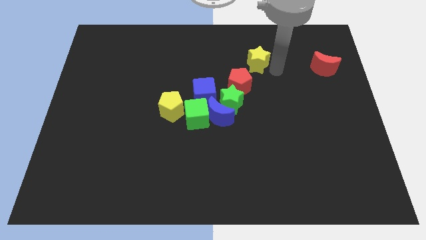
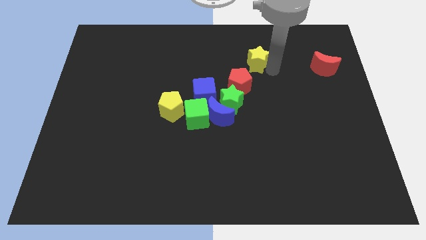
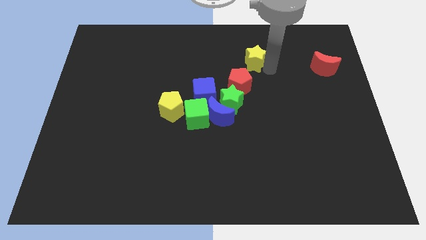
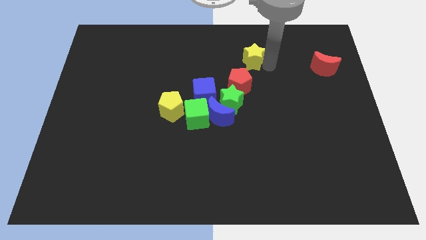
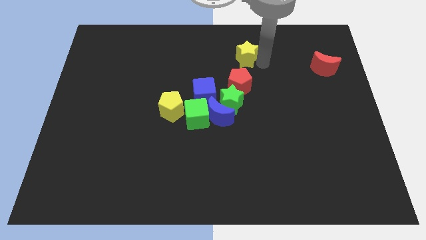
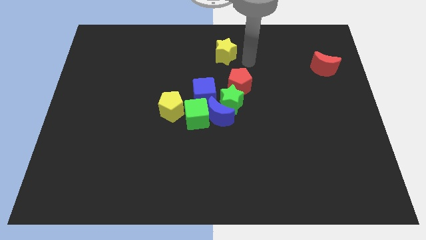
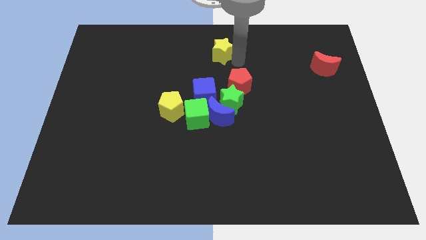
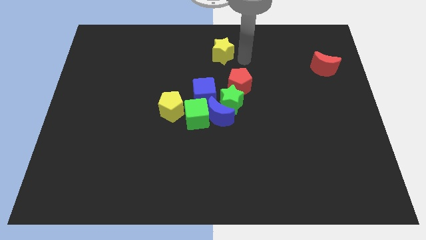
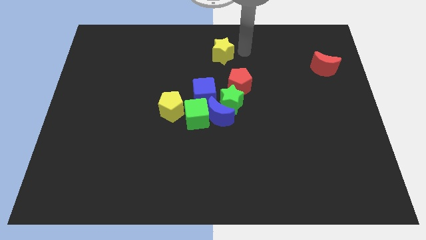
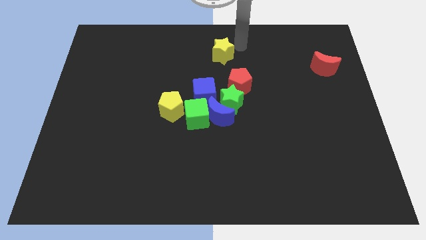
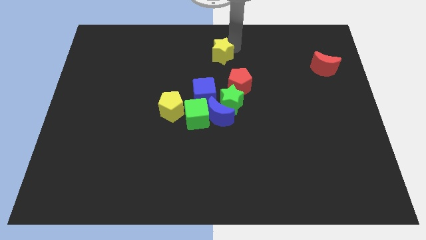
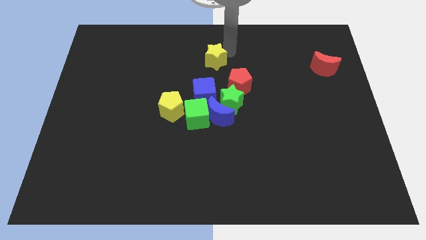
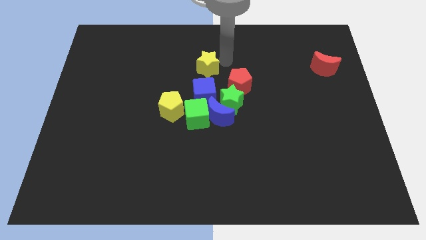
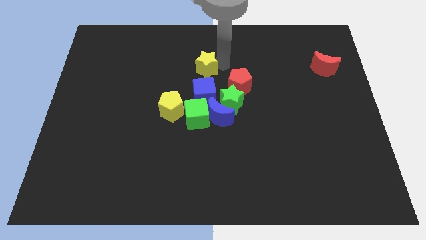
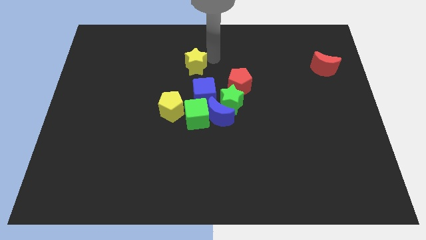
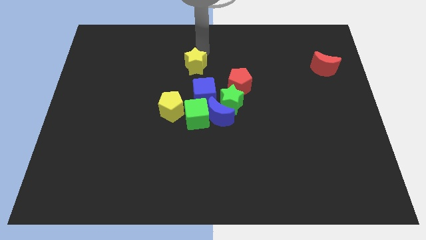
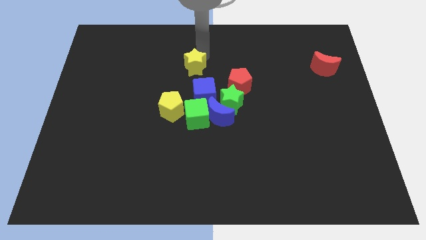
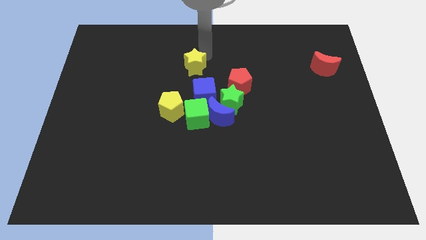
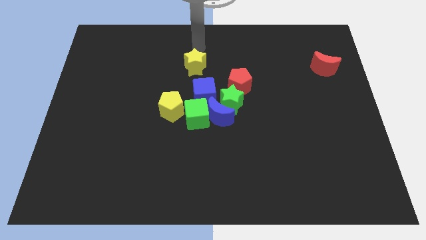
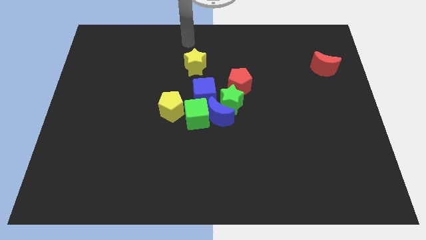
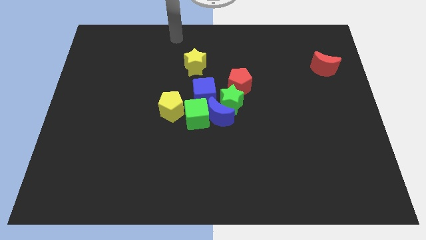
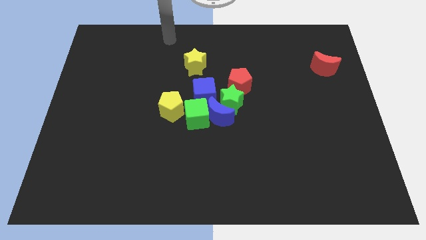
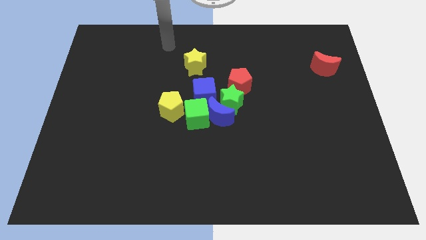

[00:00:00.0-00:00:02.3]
put the yellow star above blue cube

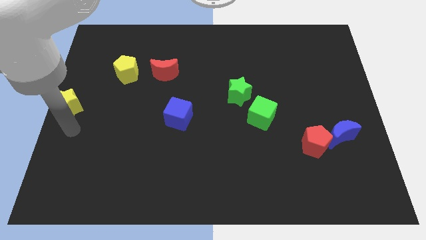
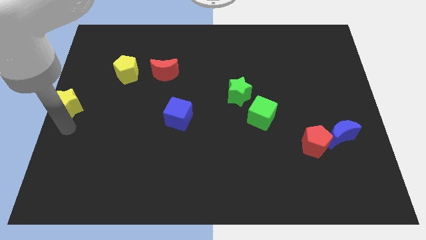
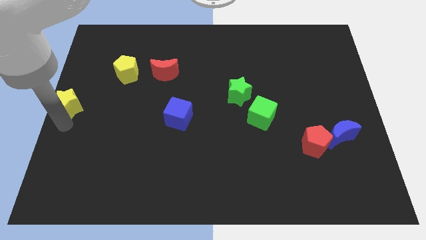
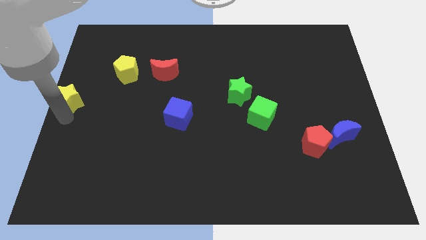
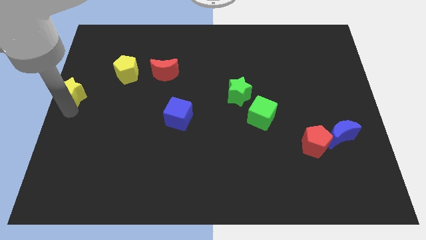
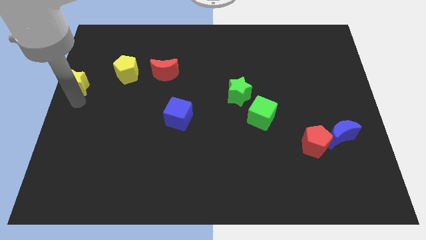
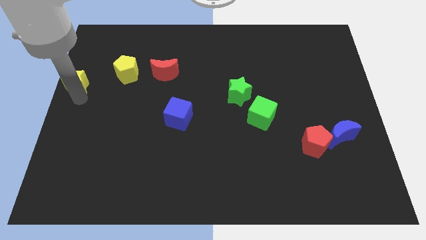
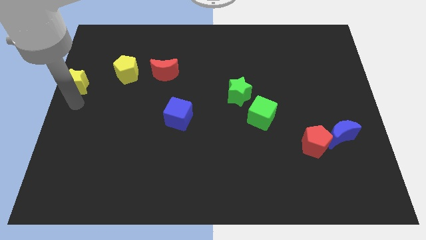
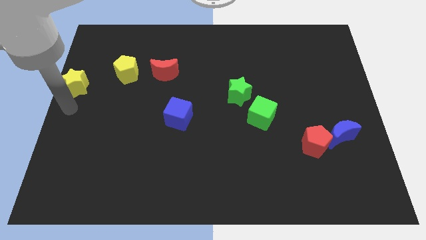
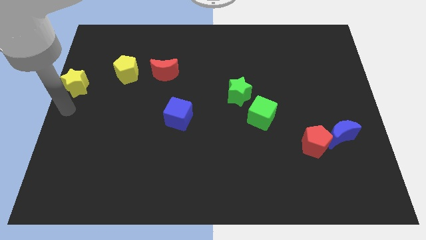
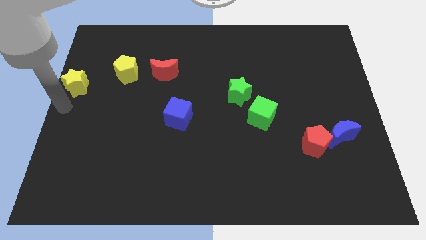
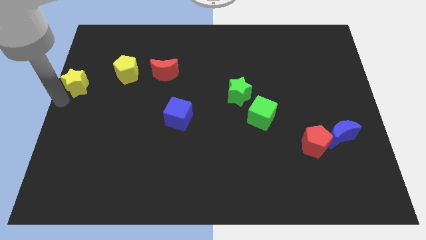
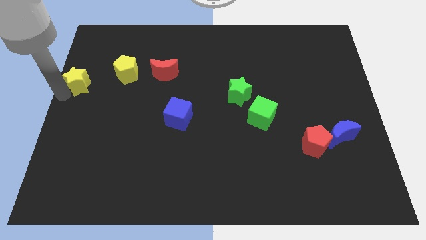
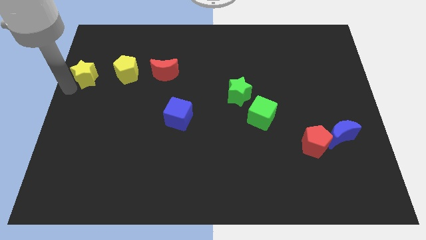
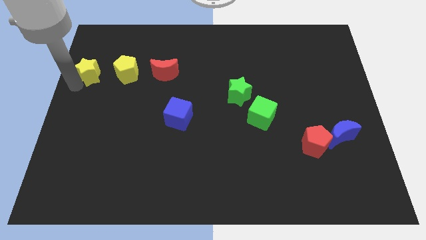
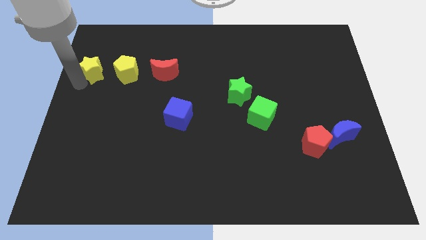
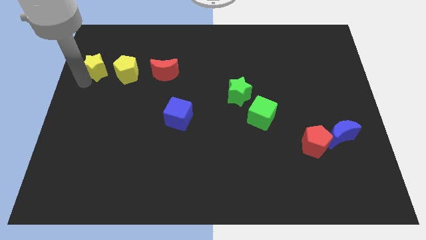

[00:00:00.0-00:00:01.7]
move the yellow star to the left side of the yellow pentagon

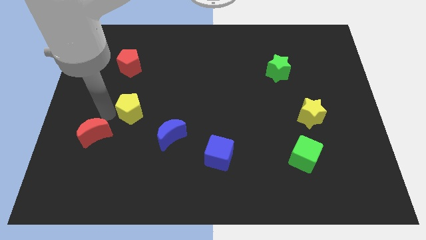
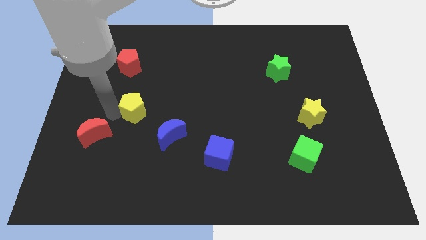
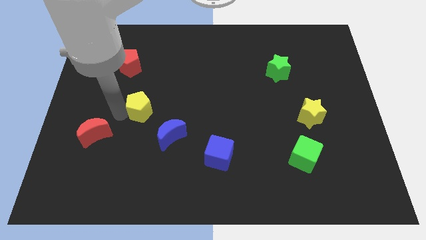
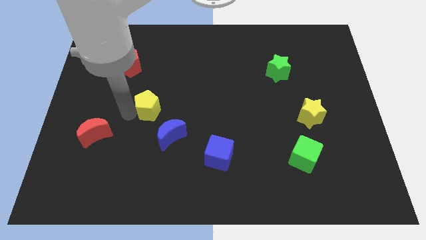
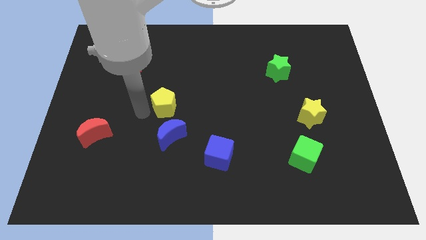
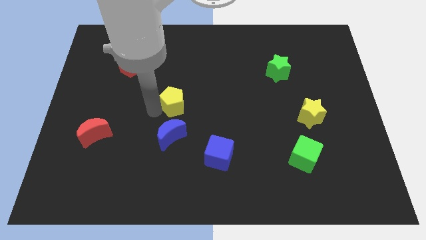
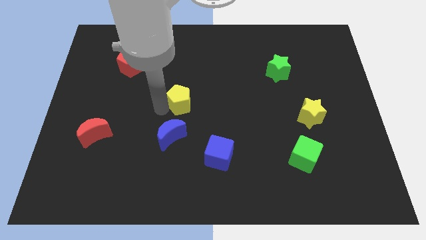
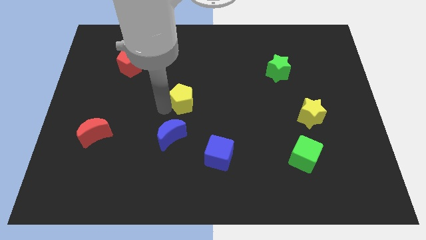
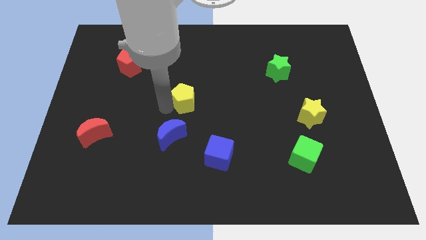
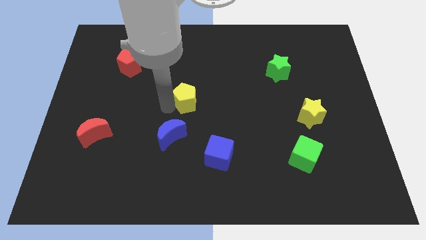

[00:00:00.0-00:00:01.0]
move the yellow pentagon towards the center

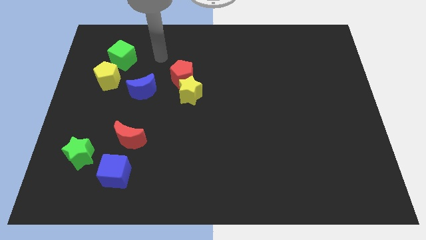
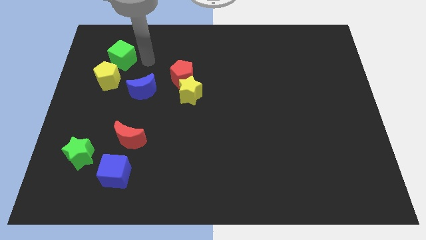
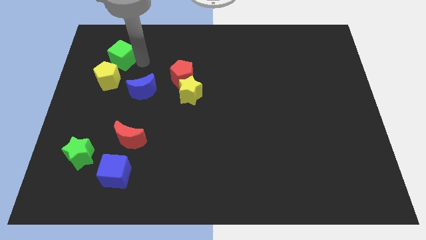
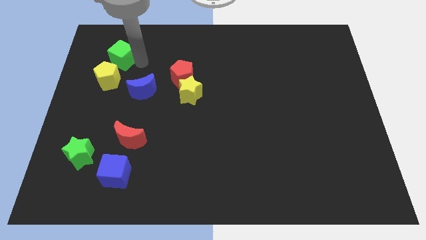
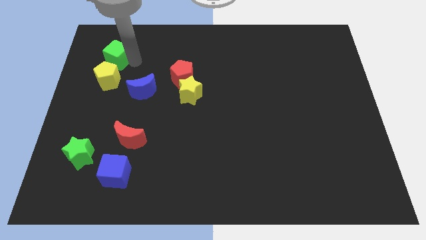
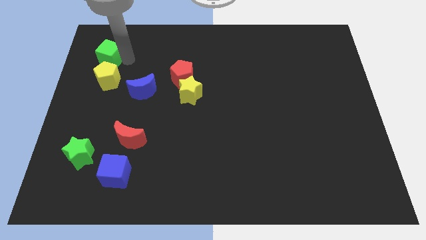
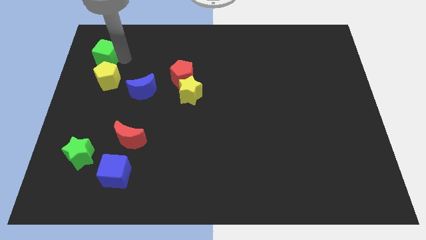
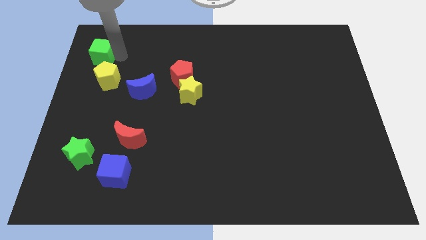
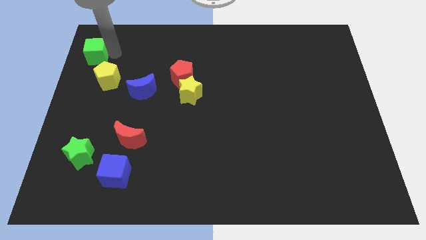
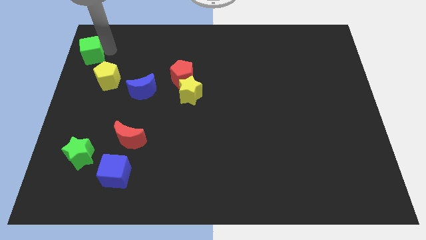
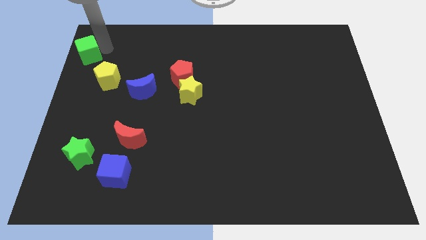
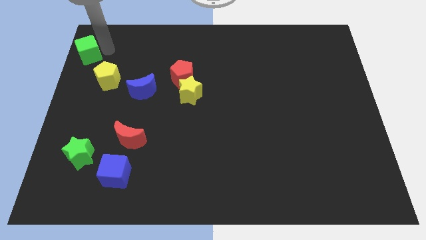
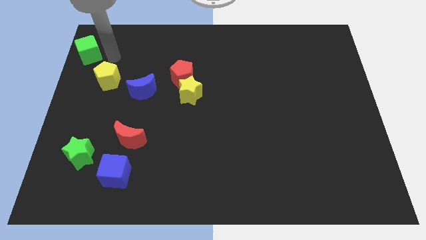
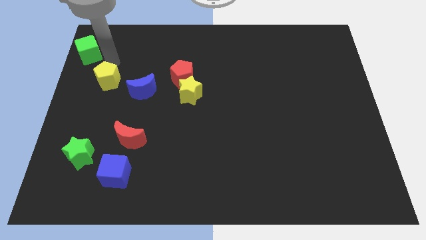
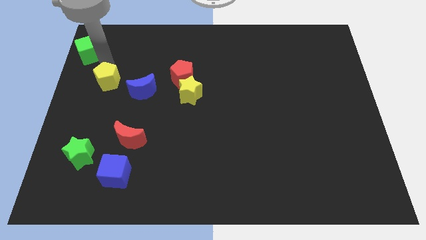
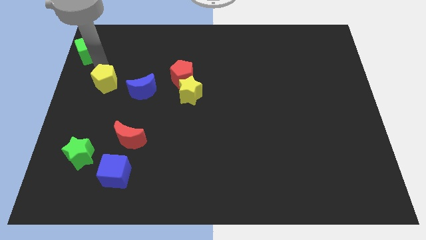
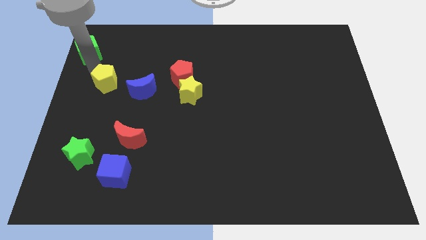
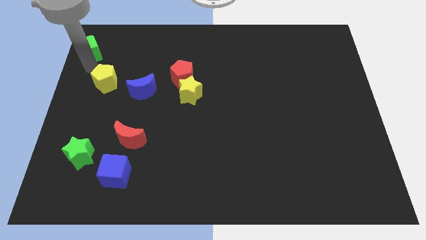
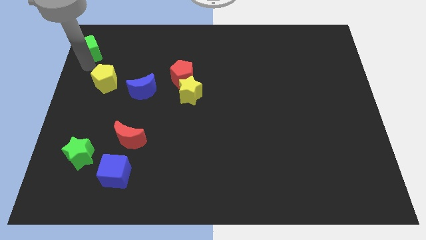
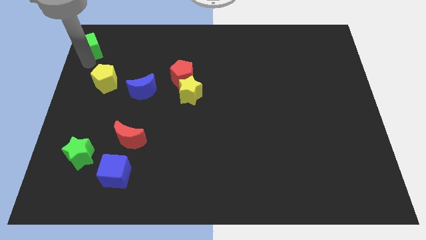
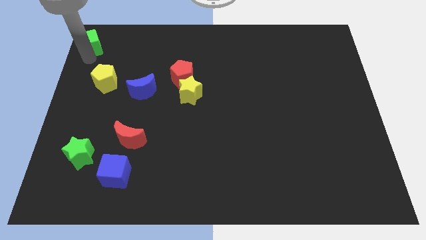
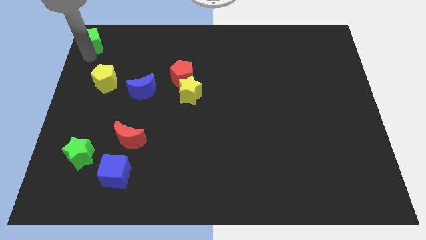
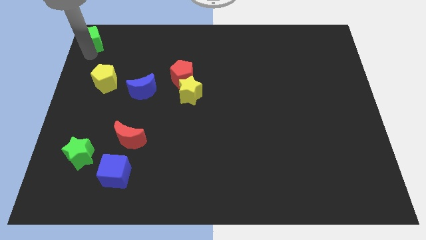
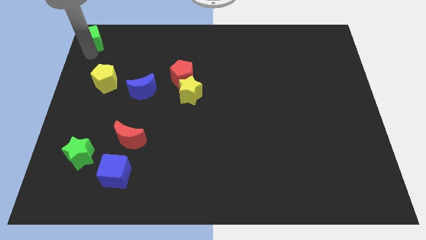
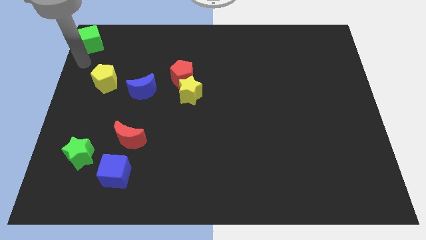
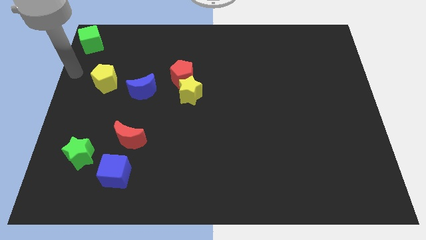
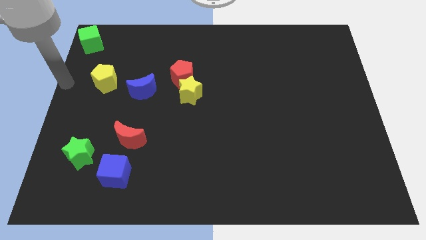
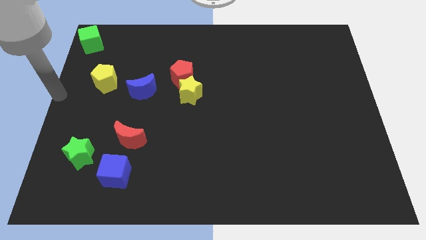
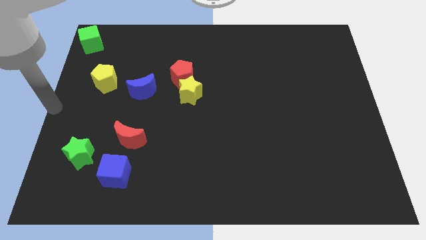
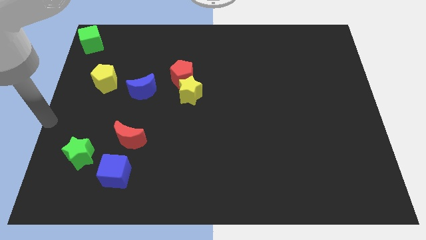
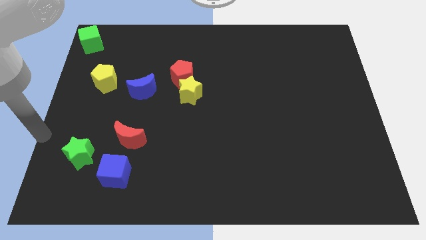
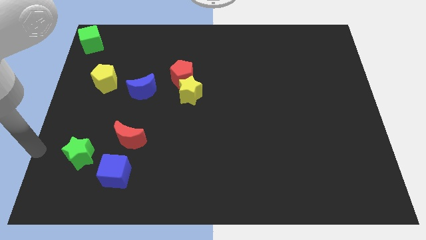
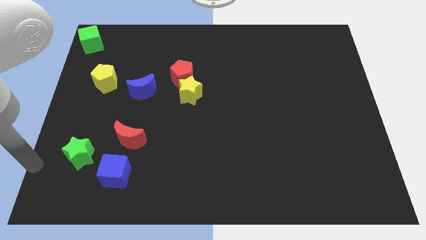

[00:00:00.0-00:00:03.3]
move the green cube to the top left of the board

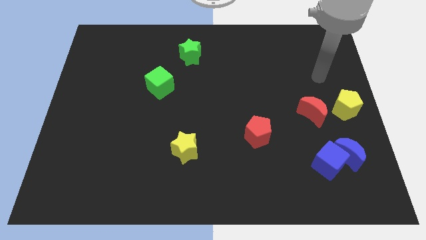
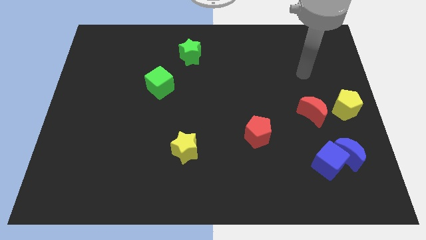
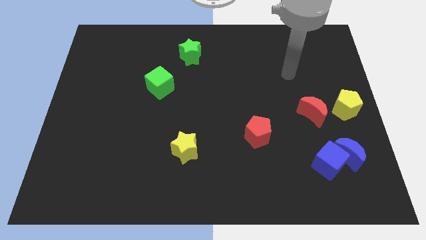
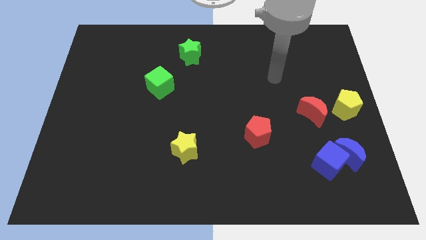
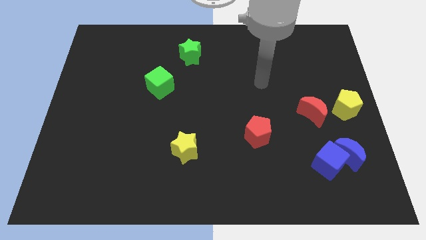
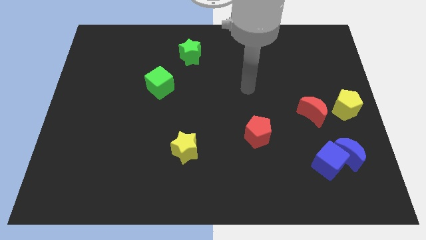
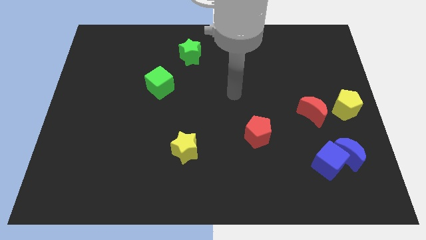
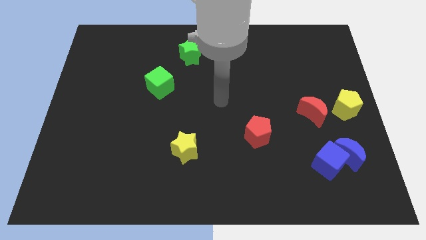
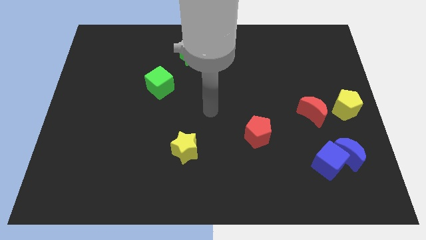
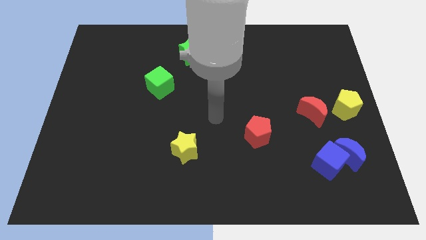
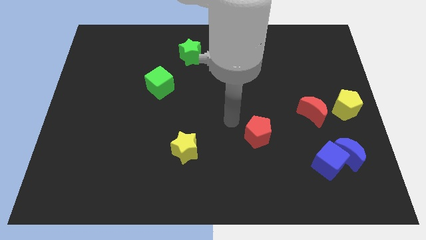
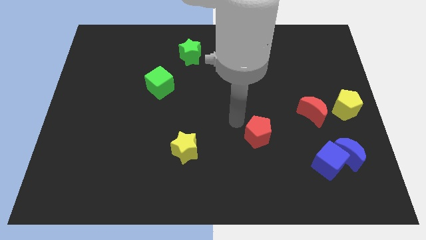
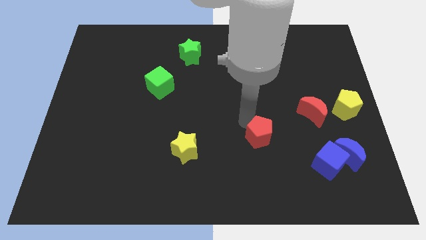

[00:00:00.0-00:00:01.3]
place your arm to red pentagon
